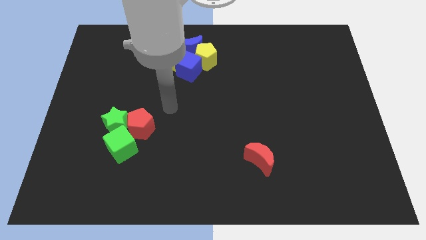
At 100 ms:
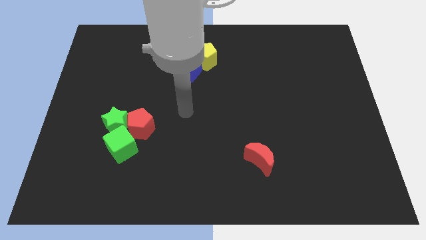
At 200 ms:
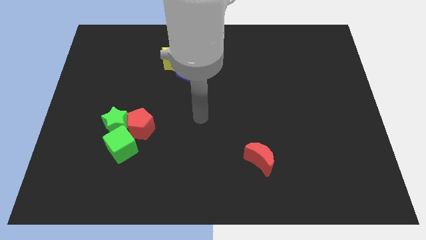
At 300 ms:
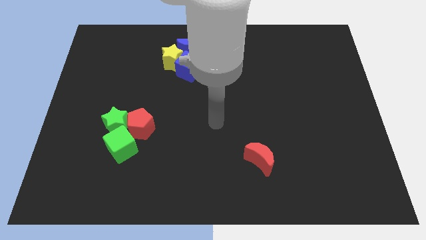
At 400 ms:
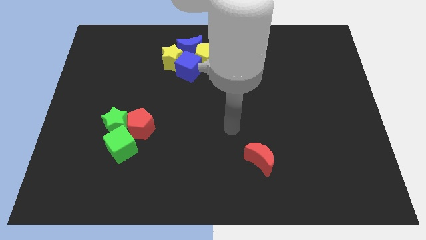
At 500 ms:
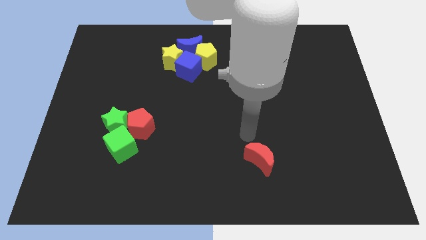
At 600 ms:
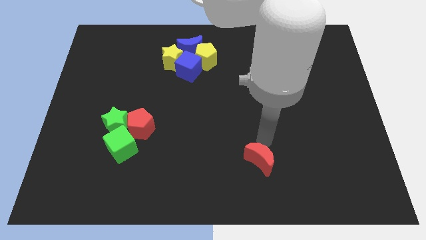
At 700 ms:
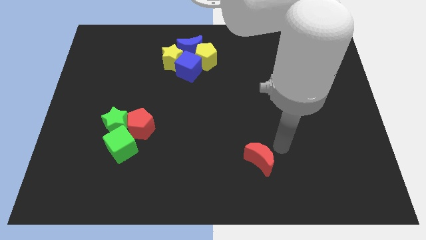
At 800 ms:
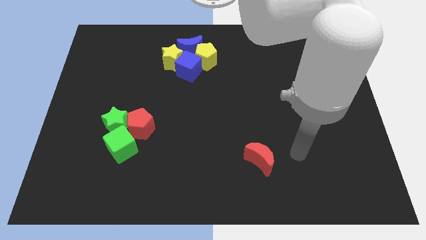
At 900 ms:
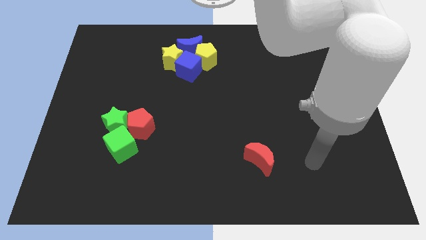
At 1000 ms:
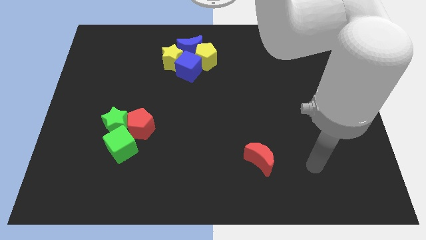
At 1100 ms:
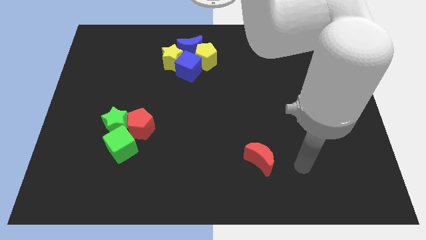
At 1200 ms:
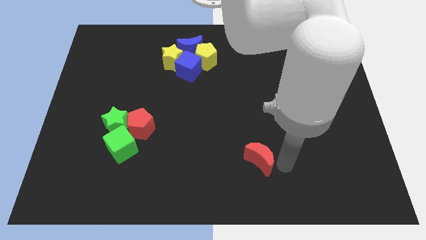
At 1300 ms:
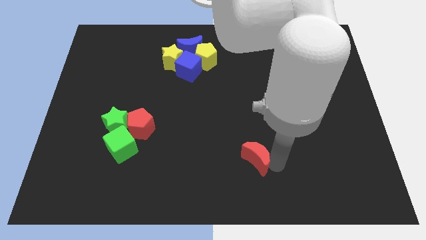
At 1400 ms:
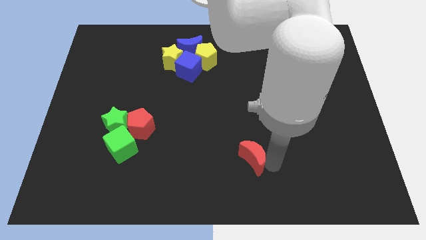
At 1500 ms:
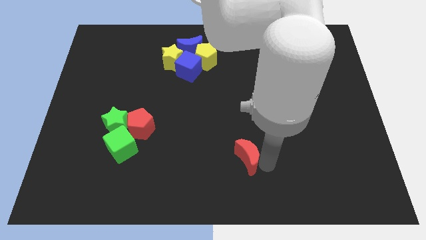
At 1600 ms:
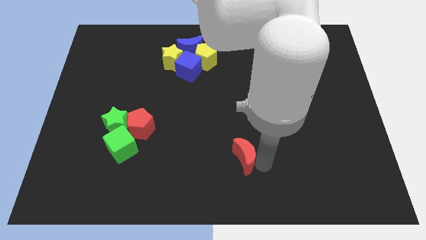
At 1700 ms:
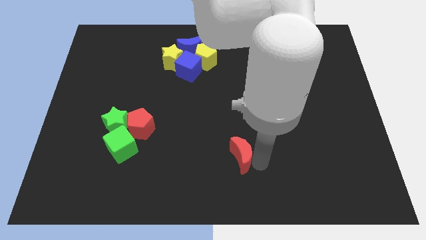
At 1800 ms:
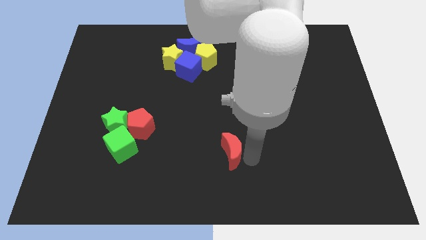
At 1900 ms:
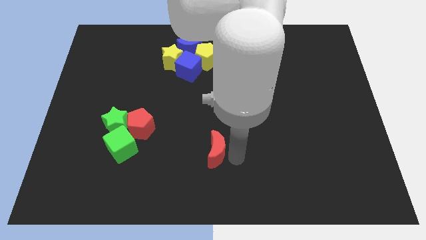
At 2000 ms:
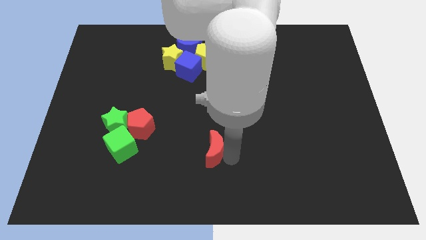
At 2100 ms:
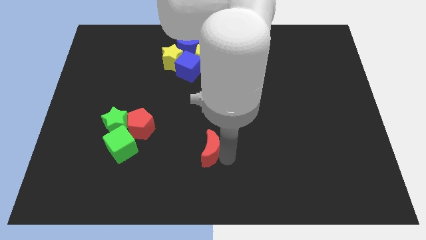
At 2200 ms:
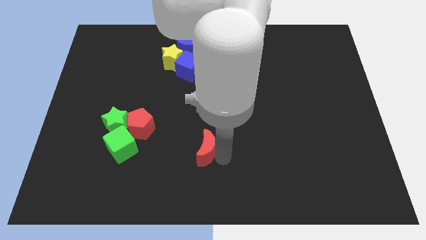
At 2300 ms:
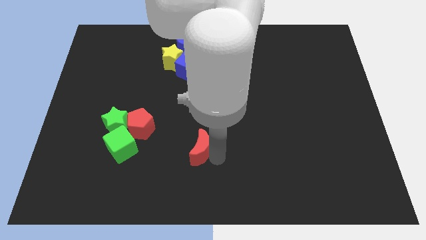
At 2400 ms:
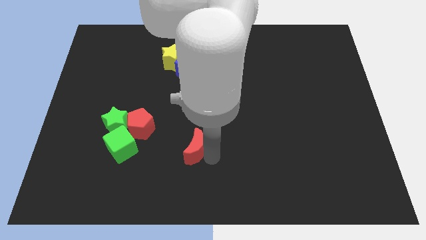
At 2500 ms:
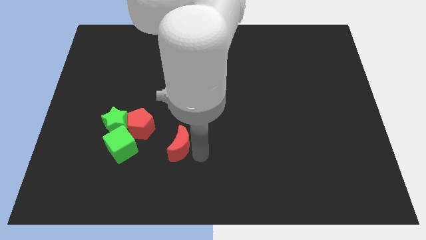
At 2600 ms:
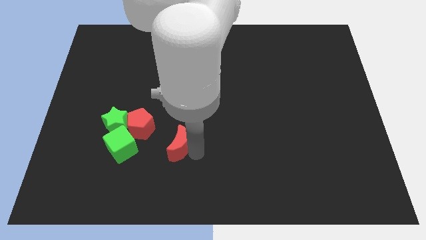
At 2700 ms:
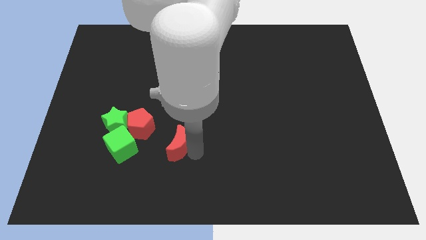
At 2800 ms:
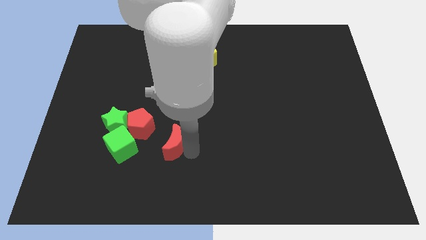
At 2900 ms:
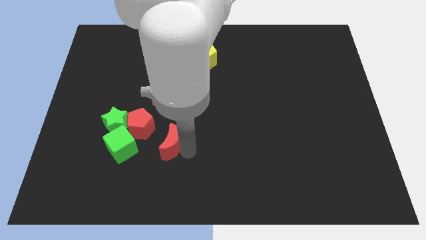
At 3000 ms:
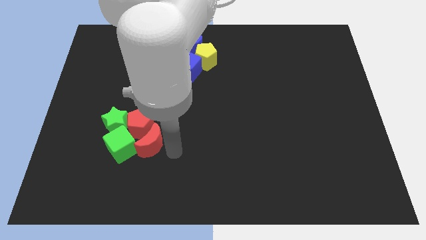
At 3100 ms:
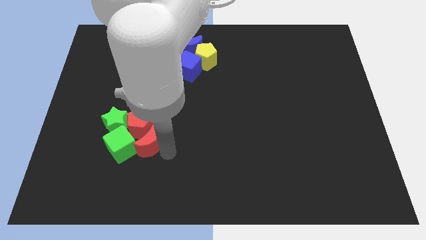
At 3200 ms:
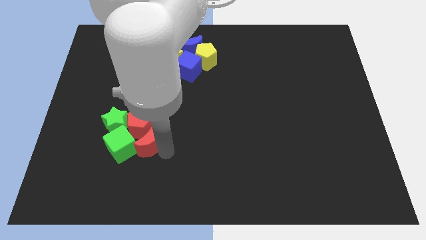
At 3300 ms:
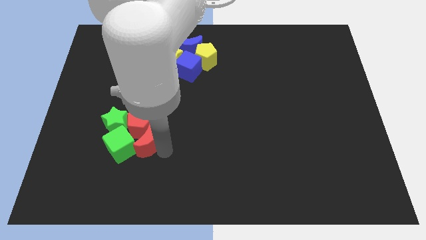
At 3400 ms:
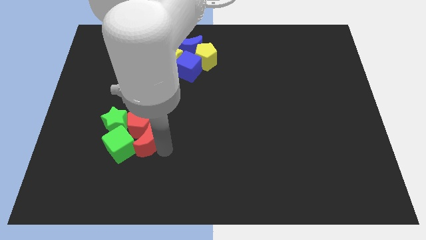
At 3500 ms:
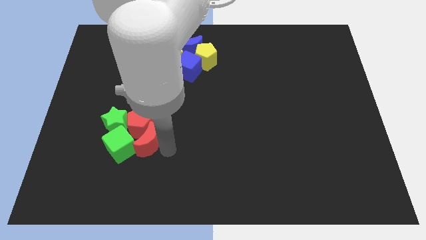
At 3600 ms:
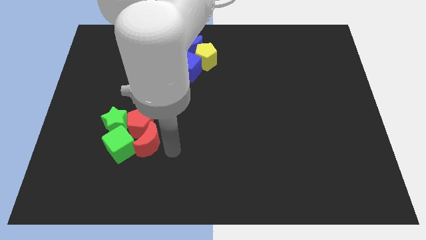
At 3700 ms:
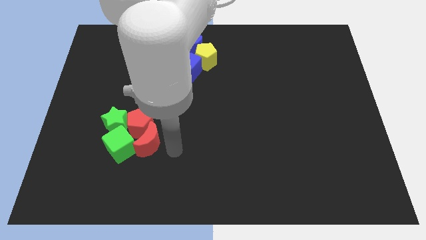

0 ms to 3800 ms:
drag red moon into group of blocks

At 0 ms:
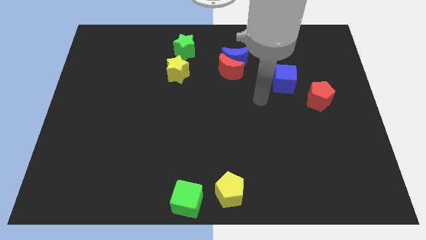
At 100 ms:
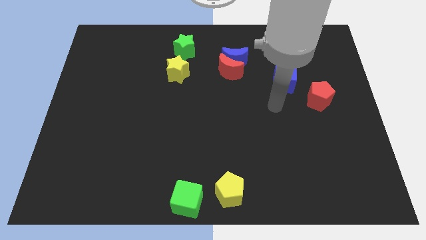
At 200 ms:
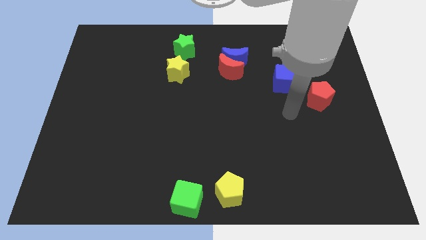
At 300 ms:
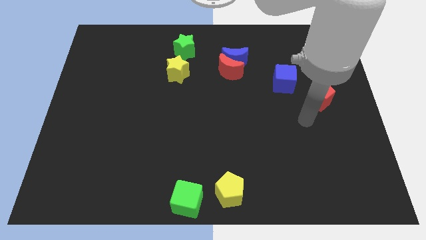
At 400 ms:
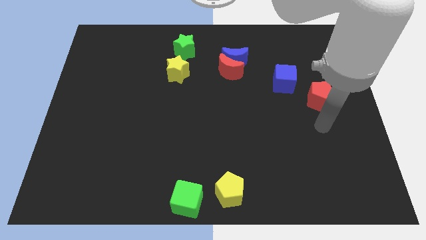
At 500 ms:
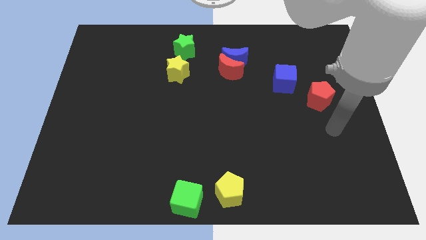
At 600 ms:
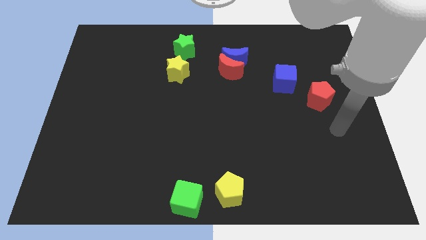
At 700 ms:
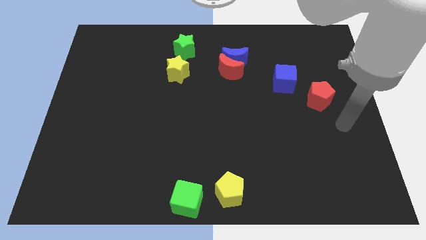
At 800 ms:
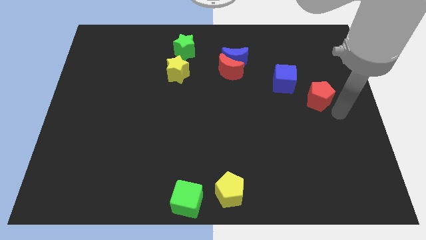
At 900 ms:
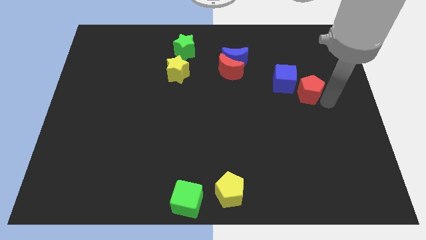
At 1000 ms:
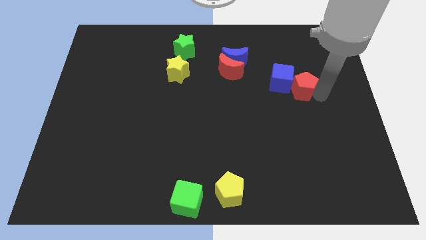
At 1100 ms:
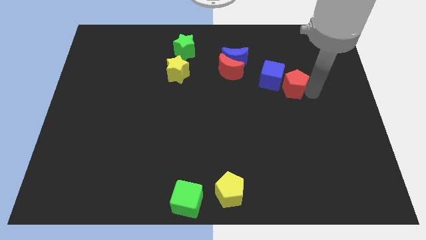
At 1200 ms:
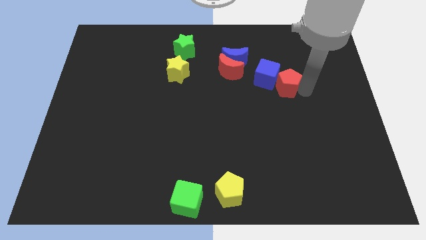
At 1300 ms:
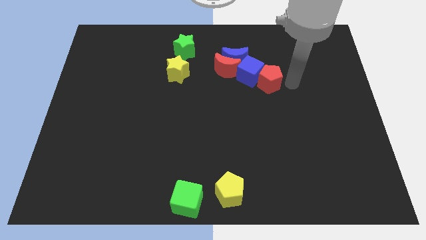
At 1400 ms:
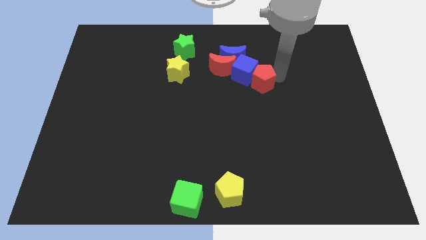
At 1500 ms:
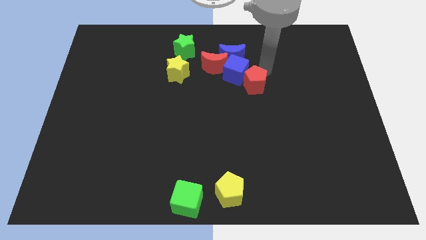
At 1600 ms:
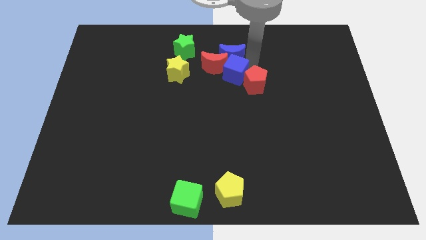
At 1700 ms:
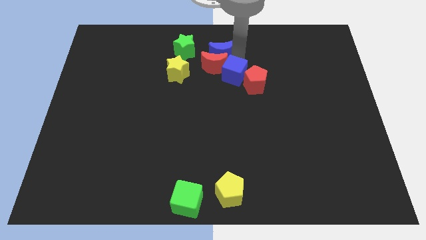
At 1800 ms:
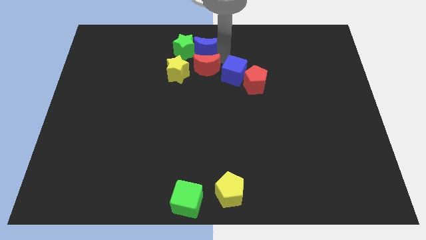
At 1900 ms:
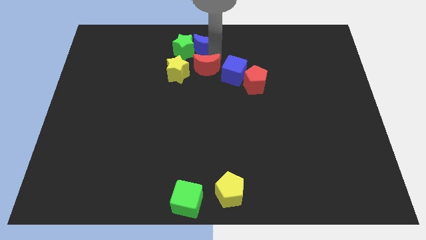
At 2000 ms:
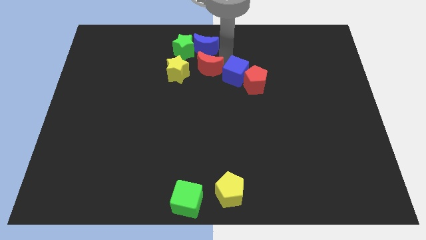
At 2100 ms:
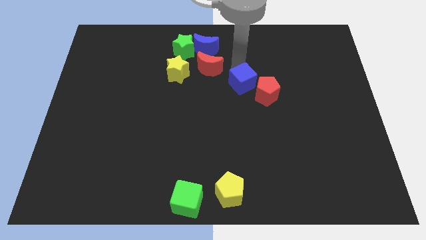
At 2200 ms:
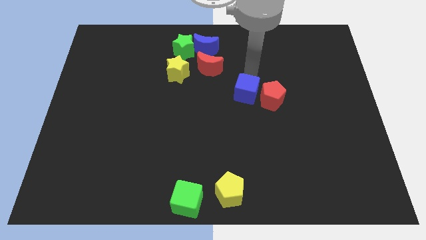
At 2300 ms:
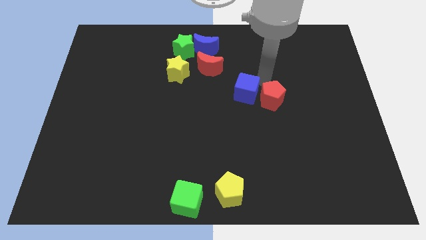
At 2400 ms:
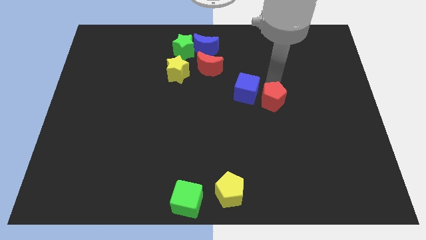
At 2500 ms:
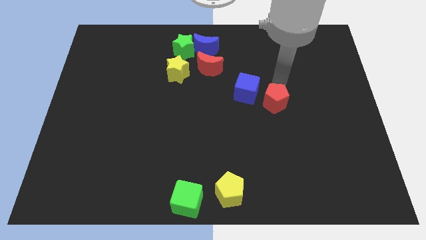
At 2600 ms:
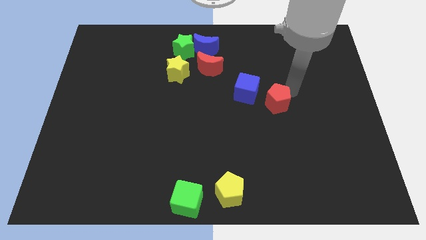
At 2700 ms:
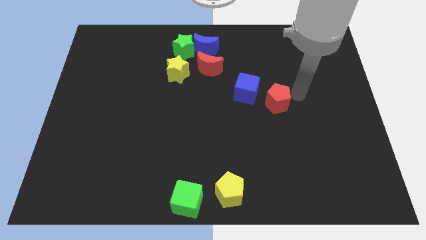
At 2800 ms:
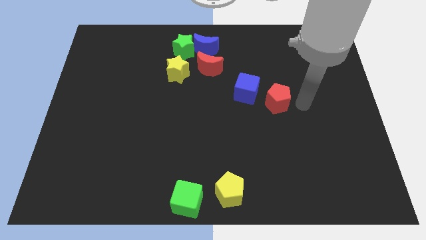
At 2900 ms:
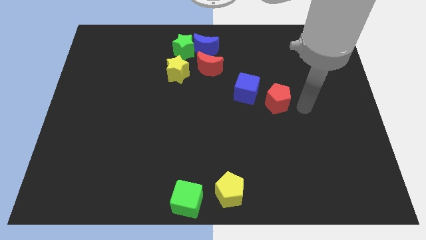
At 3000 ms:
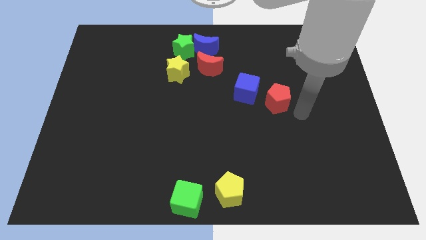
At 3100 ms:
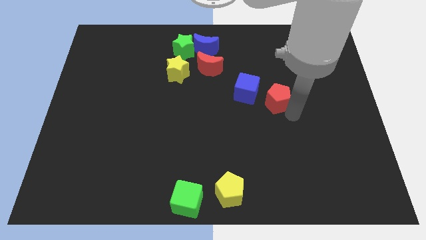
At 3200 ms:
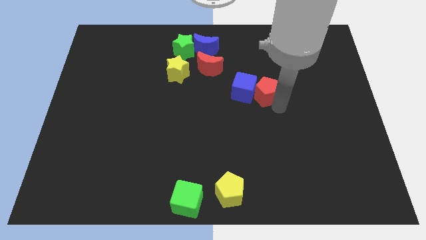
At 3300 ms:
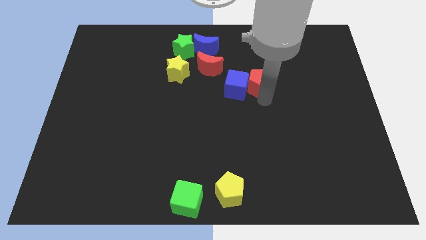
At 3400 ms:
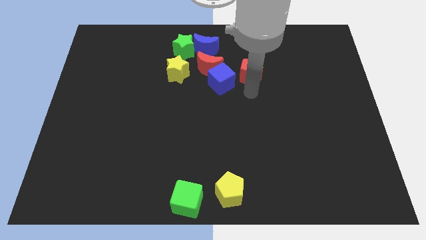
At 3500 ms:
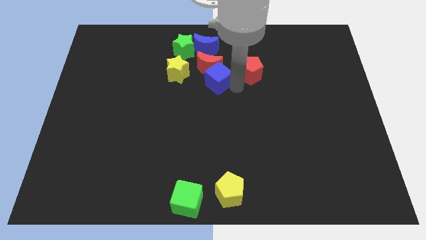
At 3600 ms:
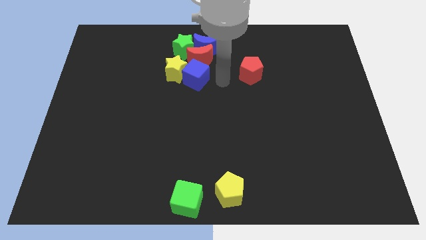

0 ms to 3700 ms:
push the red pentagon into the group of blocks

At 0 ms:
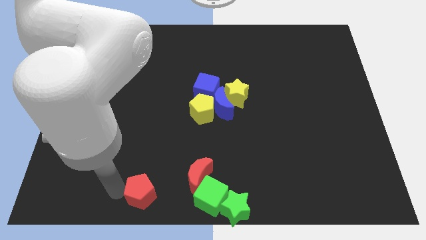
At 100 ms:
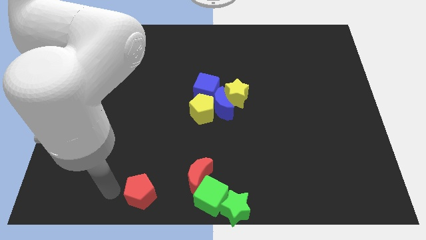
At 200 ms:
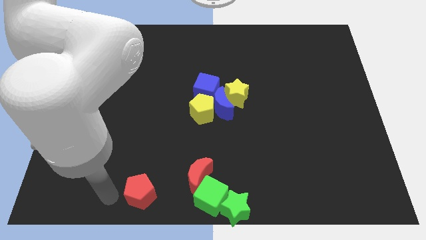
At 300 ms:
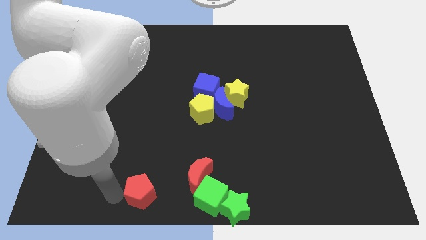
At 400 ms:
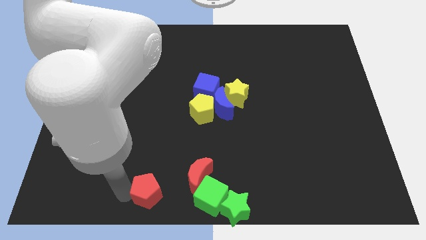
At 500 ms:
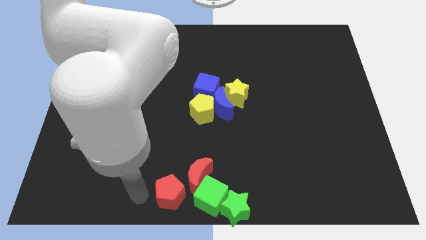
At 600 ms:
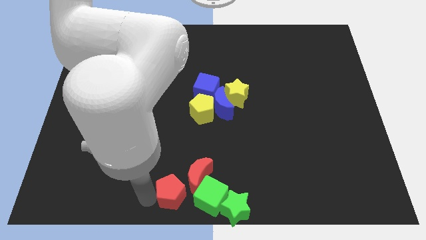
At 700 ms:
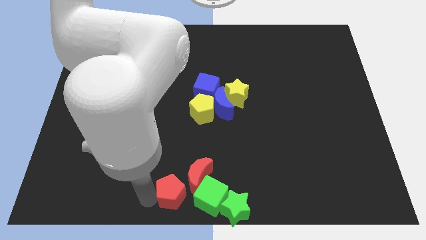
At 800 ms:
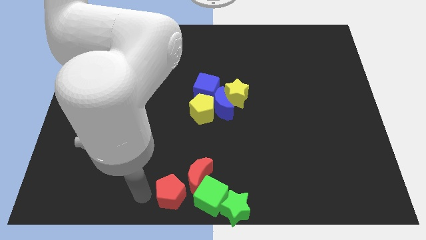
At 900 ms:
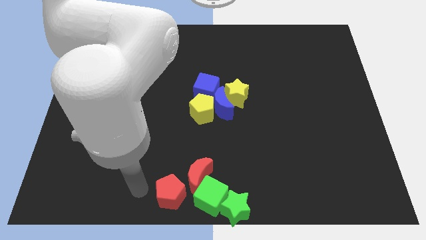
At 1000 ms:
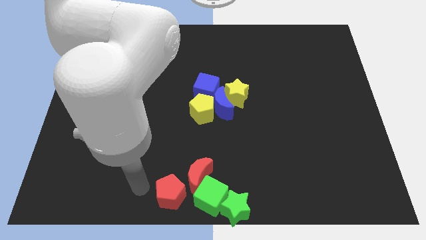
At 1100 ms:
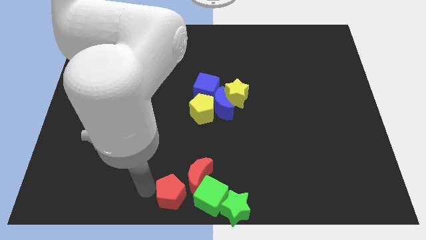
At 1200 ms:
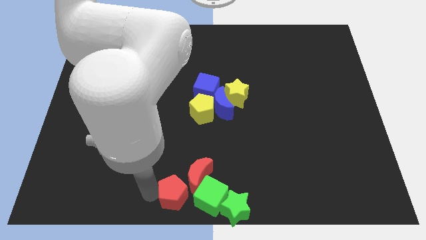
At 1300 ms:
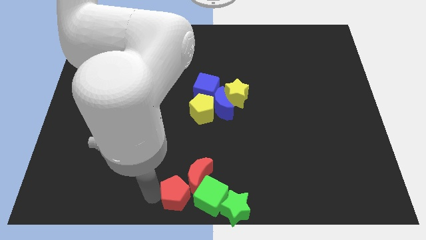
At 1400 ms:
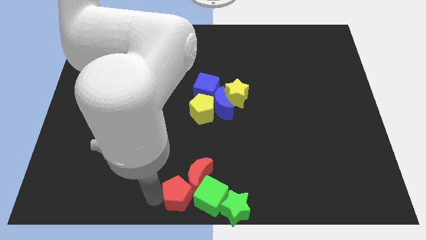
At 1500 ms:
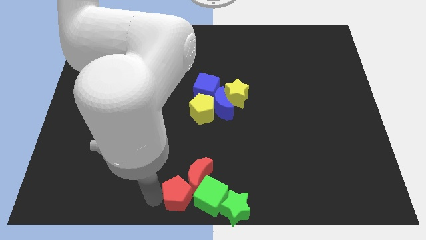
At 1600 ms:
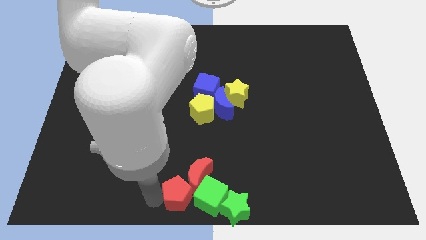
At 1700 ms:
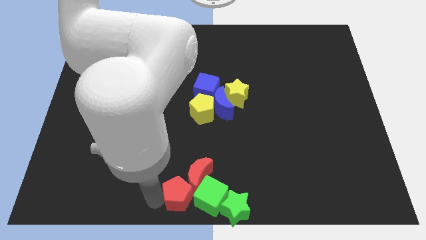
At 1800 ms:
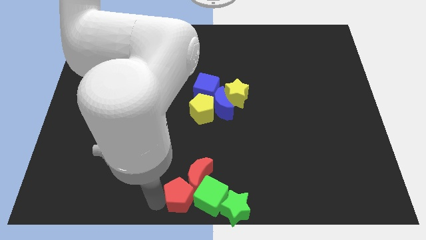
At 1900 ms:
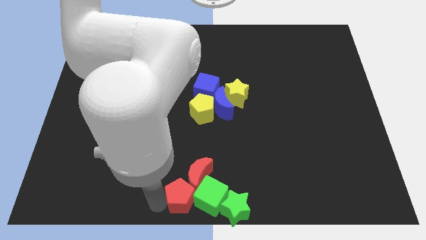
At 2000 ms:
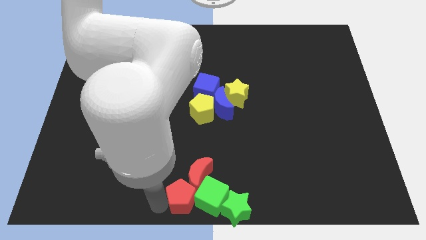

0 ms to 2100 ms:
make a group out of red blocks and green blocks
